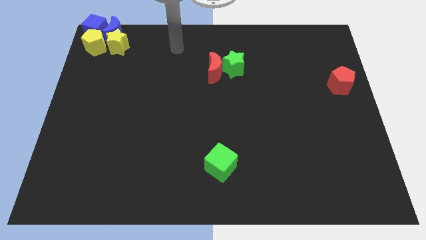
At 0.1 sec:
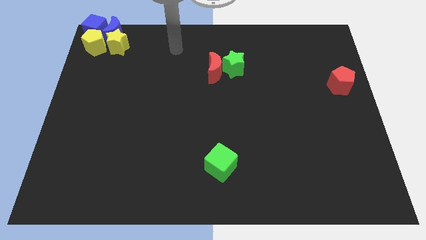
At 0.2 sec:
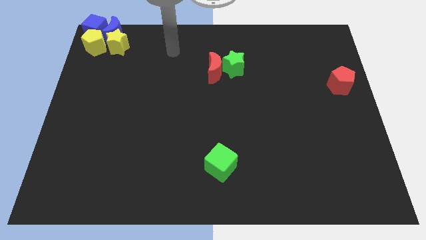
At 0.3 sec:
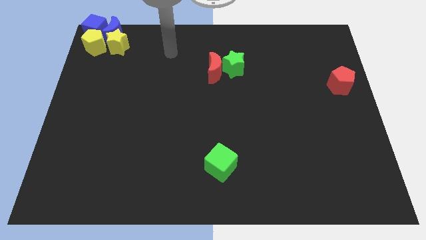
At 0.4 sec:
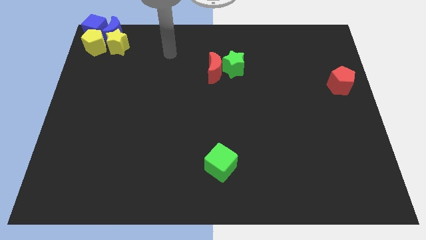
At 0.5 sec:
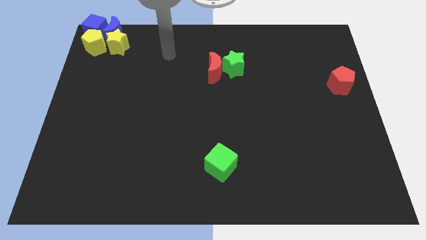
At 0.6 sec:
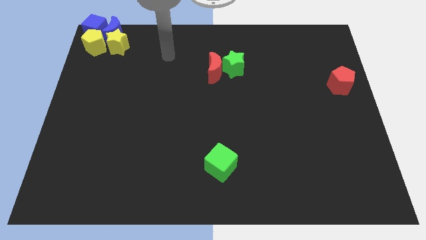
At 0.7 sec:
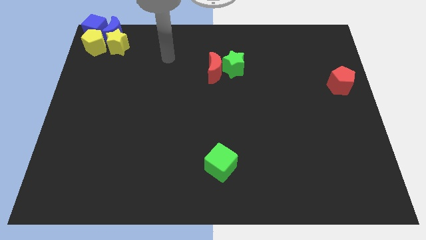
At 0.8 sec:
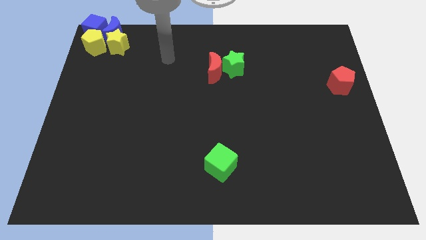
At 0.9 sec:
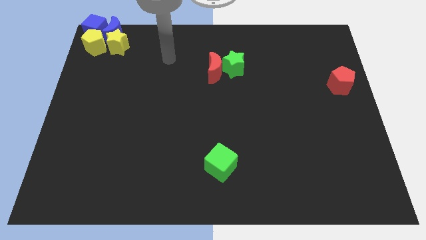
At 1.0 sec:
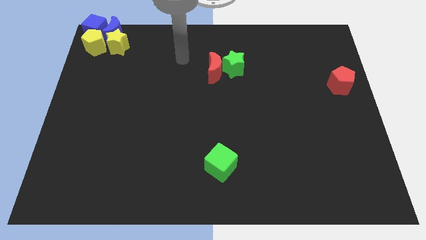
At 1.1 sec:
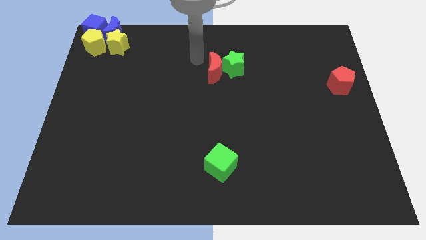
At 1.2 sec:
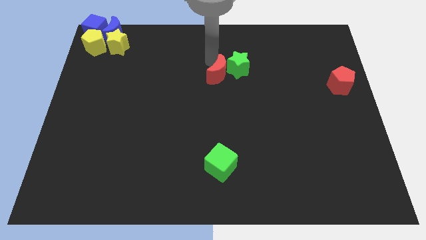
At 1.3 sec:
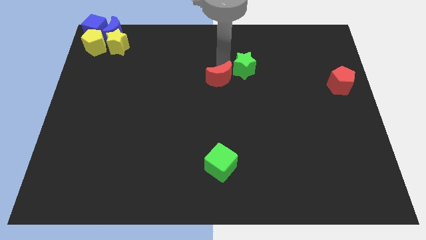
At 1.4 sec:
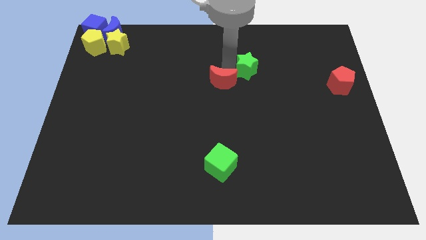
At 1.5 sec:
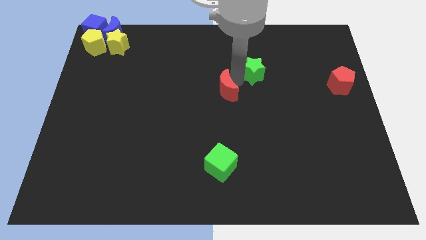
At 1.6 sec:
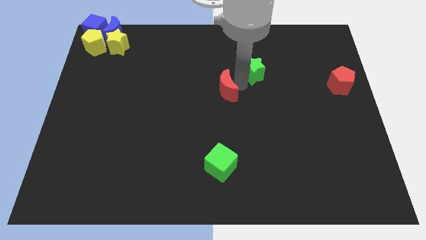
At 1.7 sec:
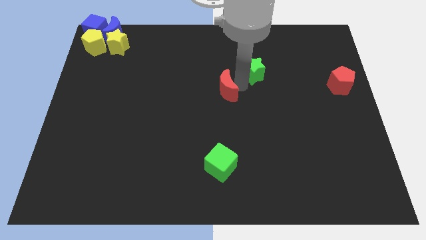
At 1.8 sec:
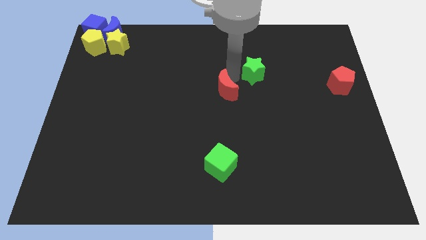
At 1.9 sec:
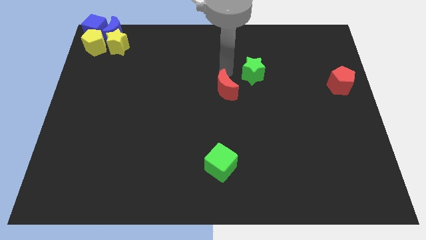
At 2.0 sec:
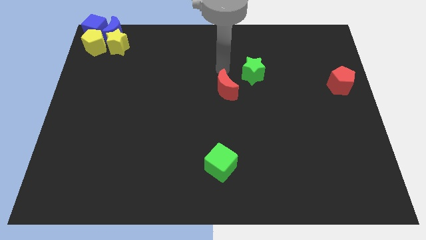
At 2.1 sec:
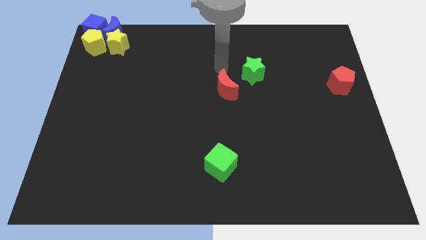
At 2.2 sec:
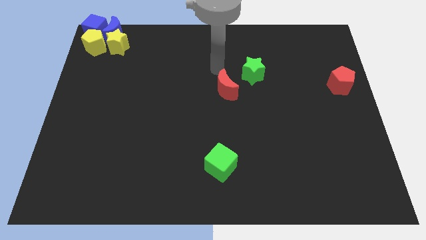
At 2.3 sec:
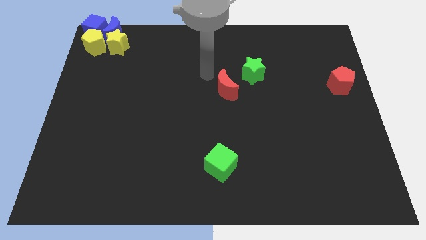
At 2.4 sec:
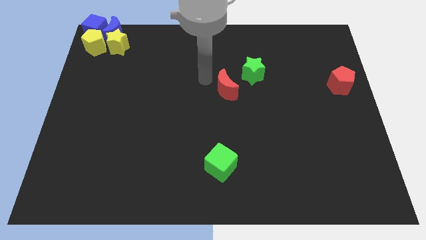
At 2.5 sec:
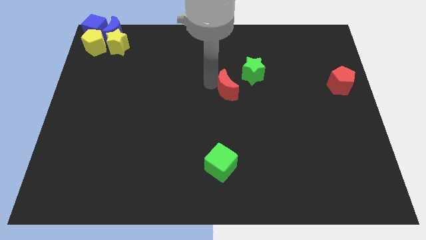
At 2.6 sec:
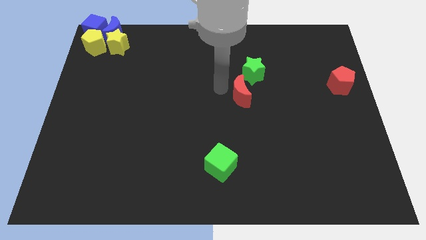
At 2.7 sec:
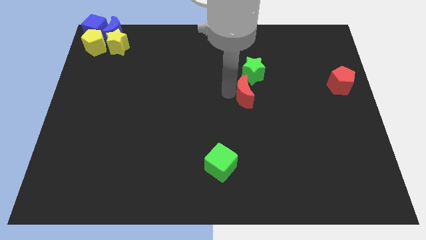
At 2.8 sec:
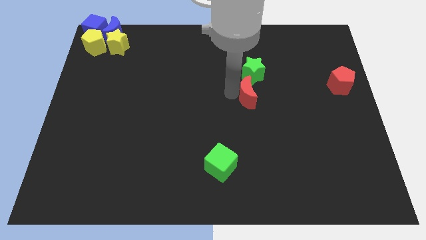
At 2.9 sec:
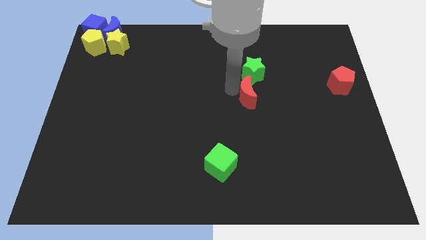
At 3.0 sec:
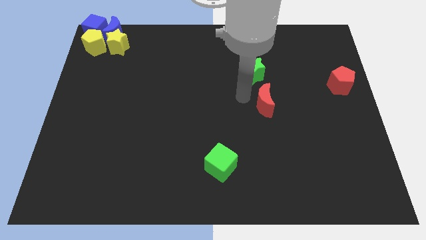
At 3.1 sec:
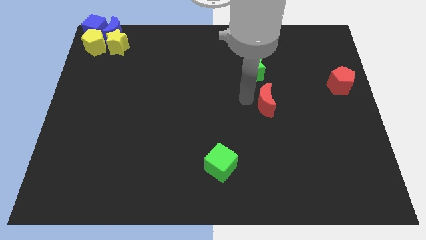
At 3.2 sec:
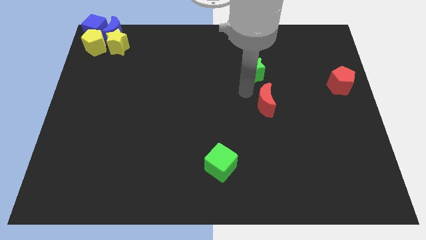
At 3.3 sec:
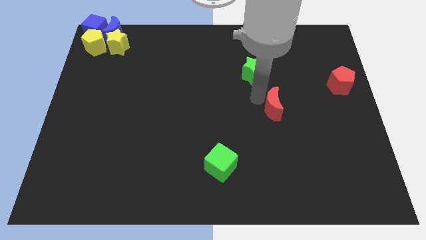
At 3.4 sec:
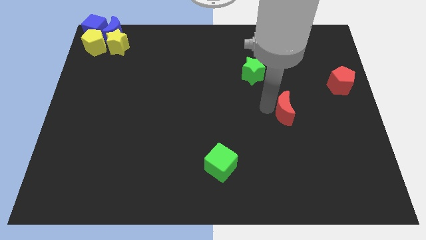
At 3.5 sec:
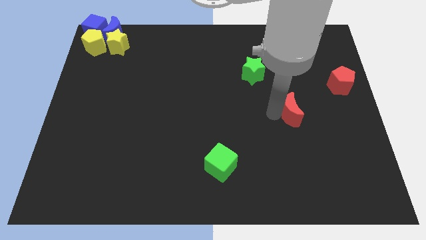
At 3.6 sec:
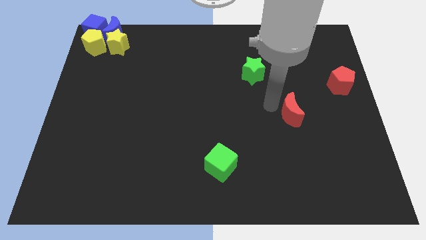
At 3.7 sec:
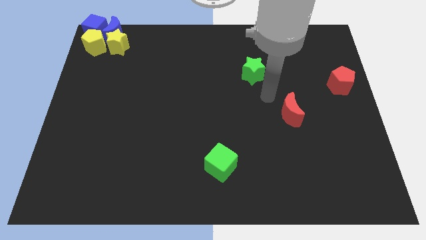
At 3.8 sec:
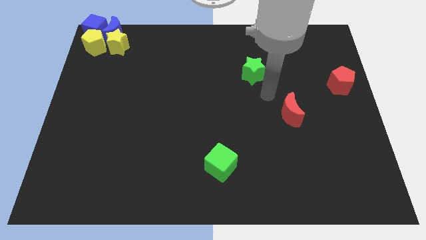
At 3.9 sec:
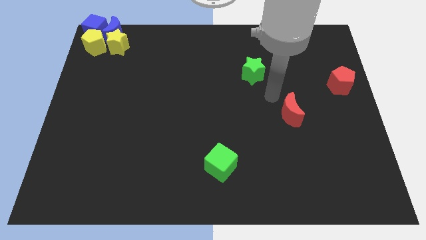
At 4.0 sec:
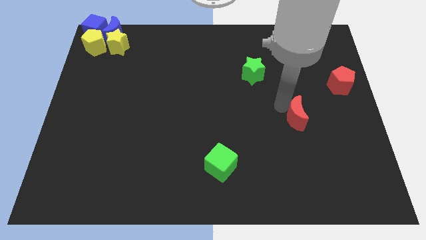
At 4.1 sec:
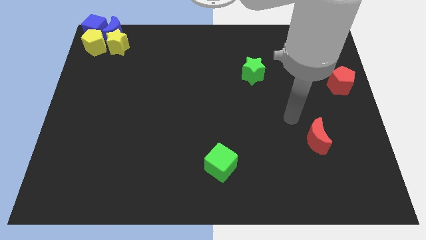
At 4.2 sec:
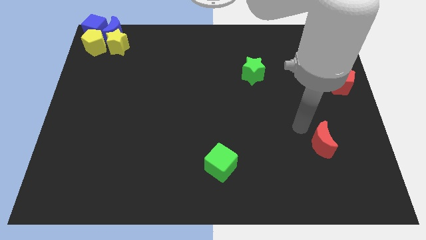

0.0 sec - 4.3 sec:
separate the red moon from the green star

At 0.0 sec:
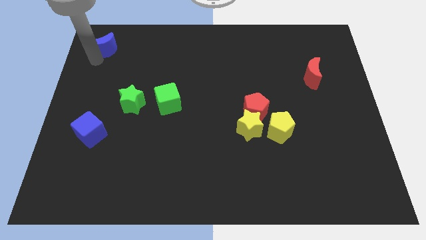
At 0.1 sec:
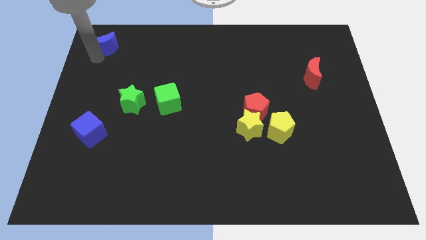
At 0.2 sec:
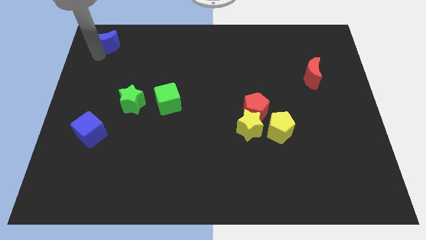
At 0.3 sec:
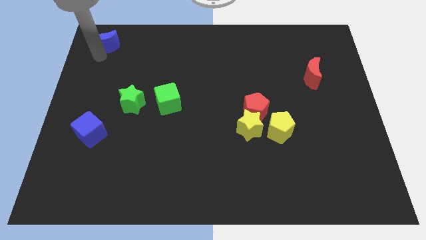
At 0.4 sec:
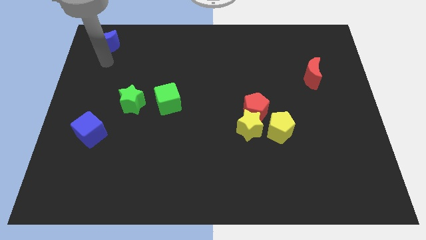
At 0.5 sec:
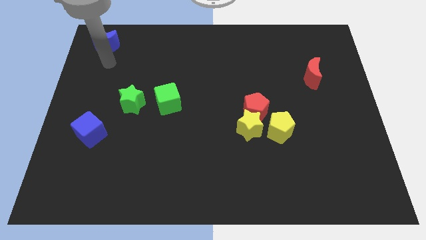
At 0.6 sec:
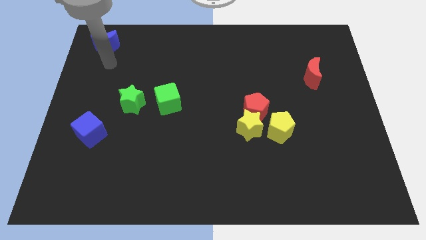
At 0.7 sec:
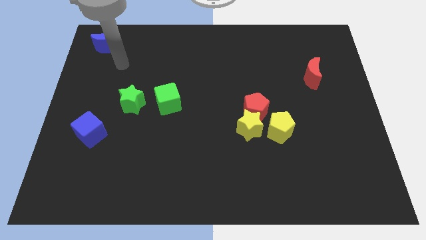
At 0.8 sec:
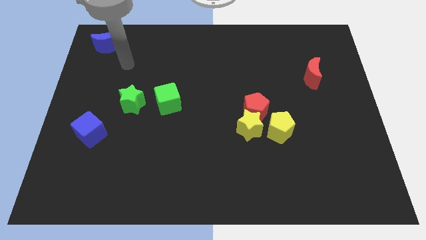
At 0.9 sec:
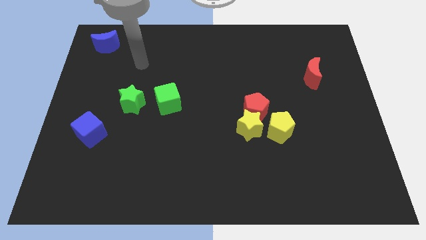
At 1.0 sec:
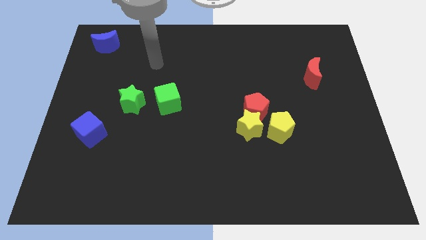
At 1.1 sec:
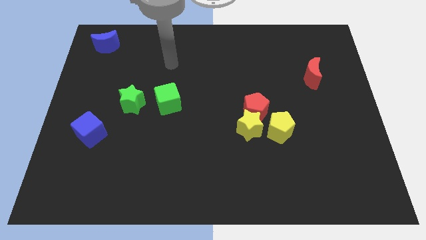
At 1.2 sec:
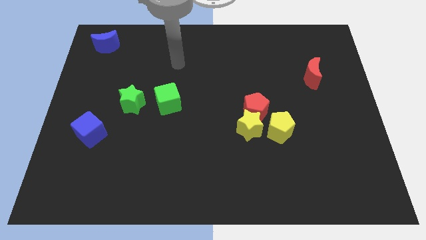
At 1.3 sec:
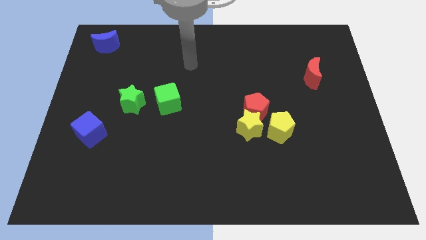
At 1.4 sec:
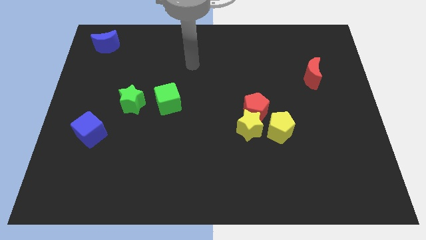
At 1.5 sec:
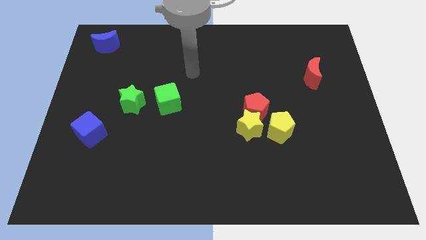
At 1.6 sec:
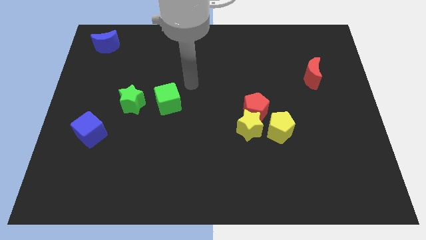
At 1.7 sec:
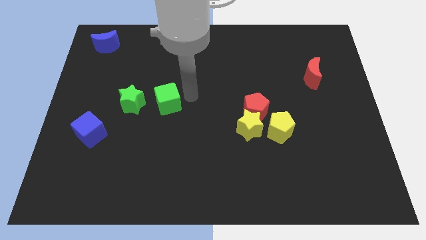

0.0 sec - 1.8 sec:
move the blue crescent to the top left of the board

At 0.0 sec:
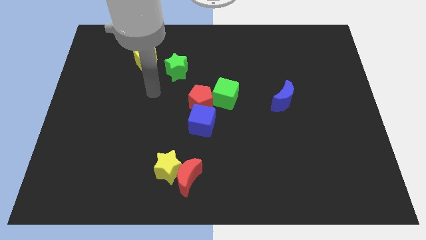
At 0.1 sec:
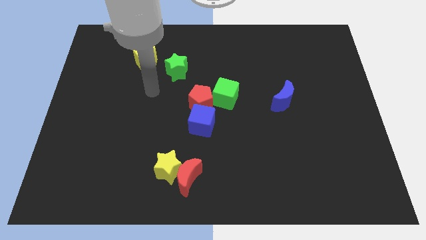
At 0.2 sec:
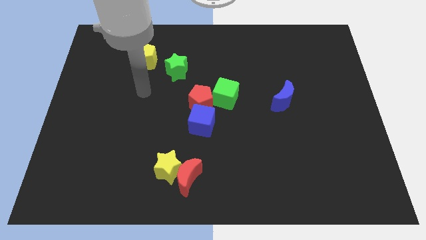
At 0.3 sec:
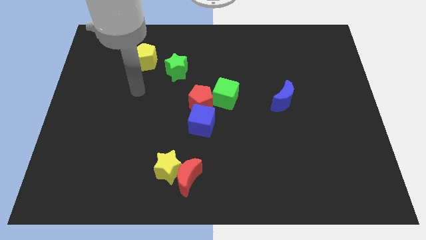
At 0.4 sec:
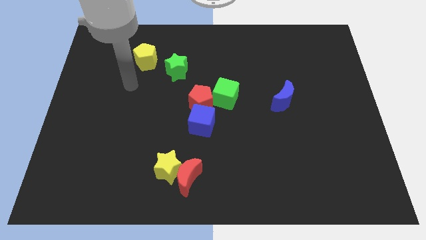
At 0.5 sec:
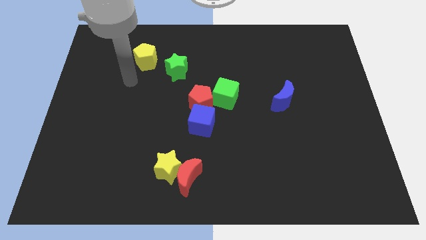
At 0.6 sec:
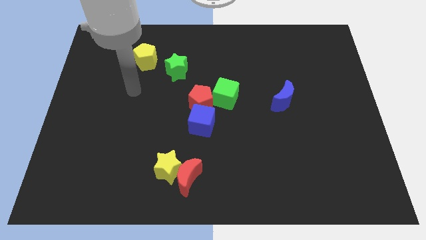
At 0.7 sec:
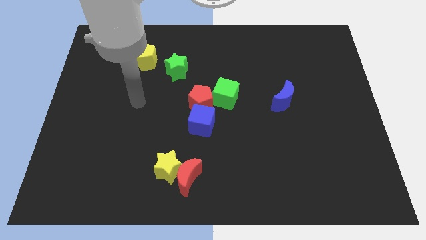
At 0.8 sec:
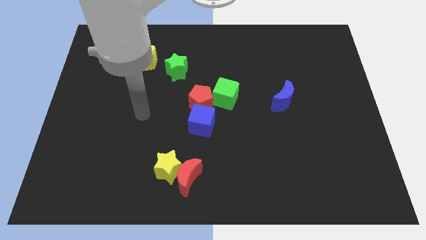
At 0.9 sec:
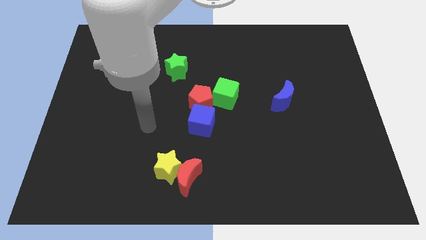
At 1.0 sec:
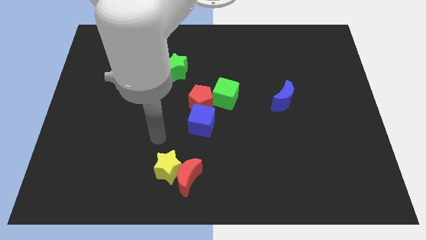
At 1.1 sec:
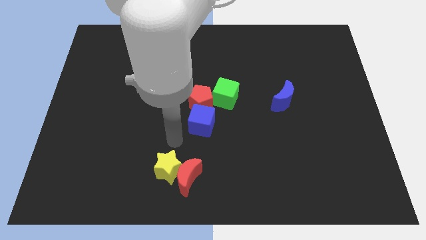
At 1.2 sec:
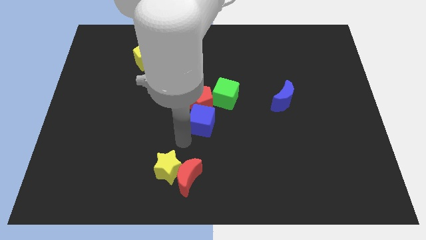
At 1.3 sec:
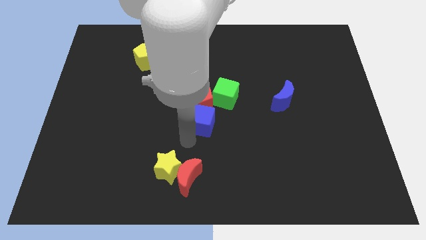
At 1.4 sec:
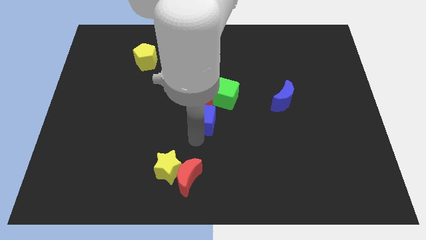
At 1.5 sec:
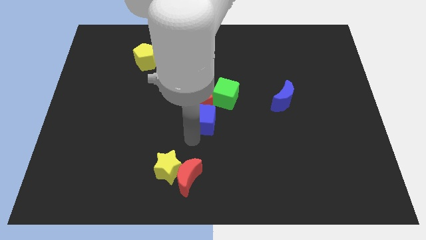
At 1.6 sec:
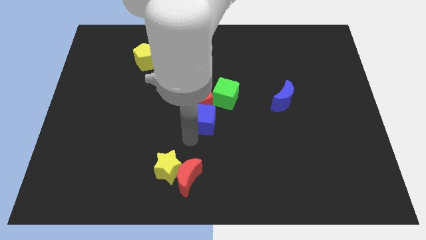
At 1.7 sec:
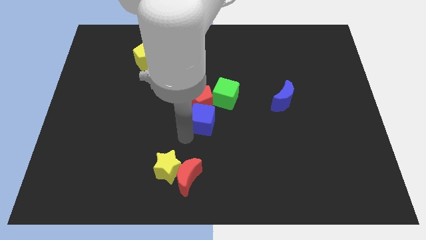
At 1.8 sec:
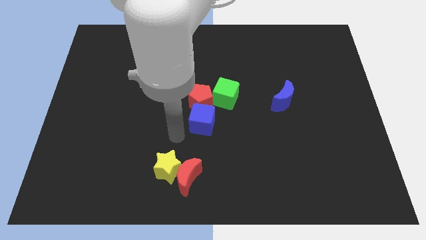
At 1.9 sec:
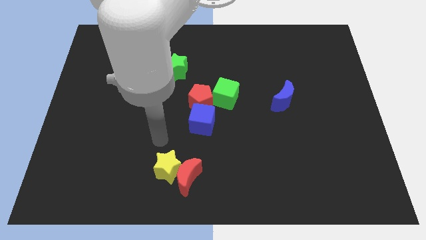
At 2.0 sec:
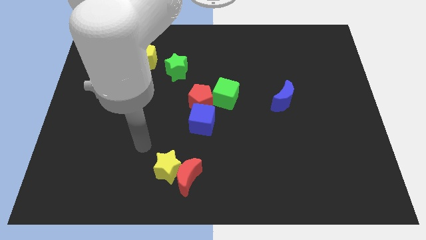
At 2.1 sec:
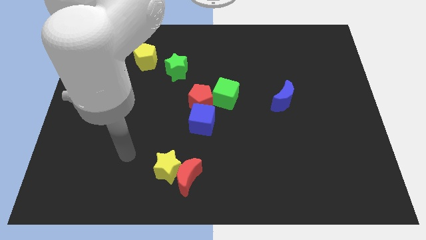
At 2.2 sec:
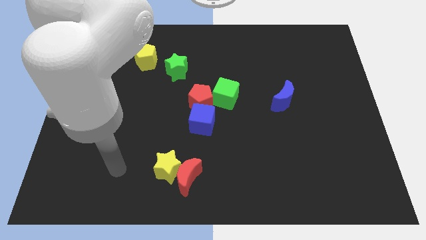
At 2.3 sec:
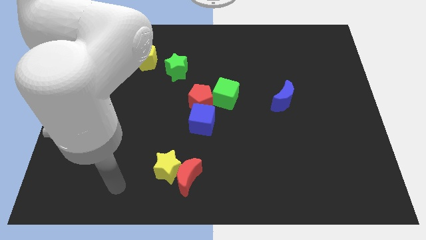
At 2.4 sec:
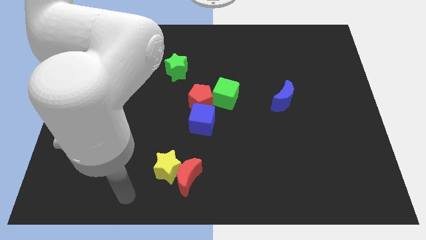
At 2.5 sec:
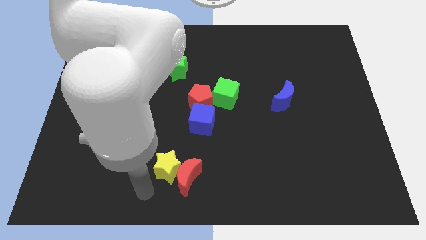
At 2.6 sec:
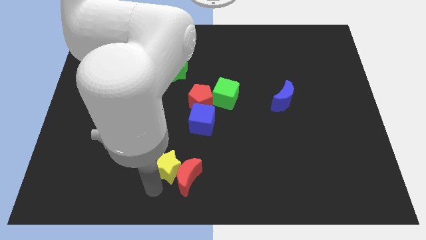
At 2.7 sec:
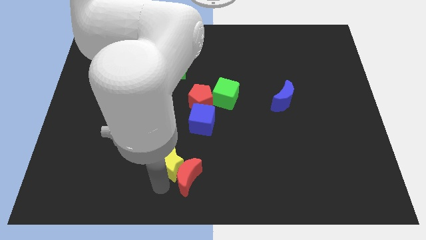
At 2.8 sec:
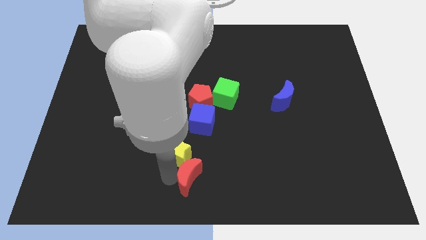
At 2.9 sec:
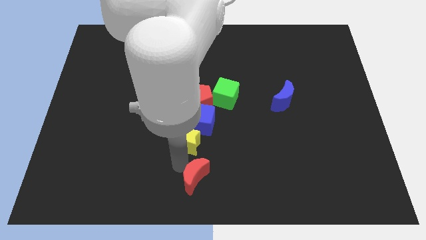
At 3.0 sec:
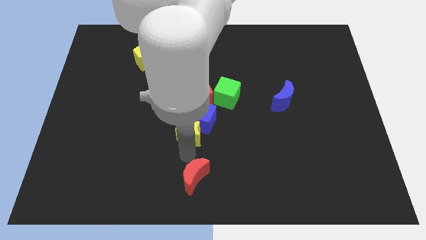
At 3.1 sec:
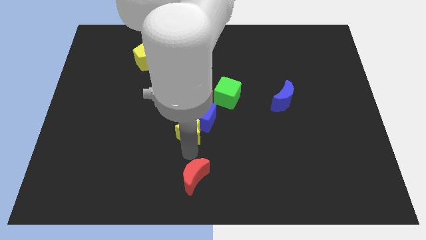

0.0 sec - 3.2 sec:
push the yellow star to the bottom of the blue cube
